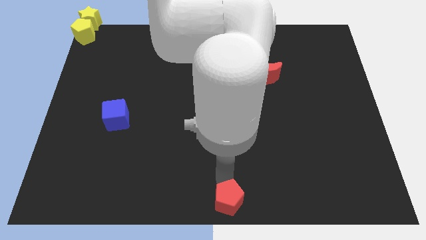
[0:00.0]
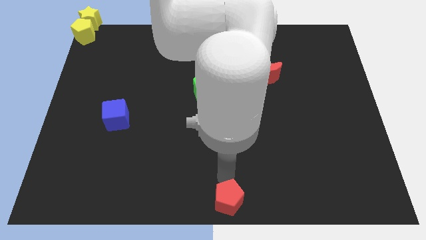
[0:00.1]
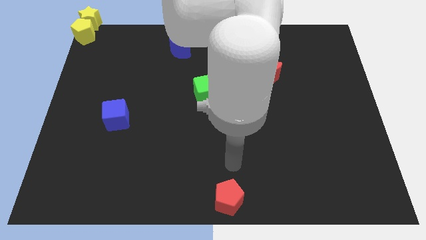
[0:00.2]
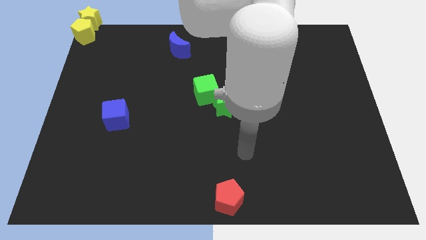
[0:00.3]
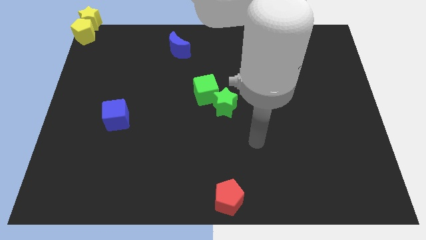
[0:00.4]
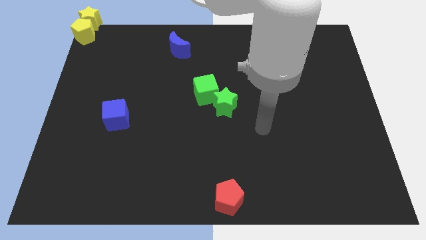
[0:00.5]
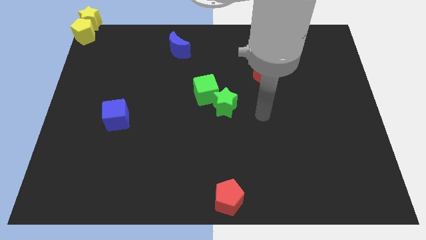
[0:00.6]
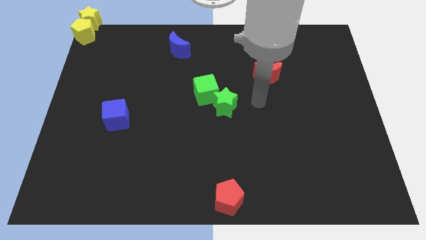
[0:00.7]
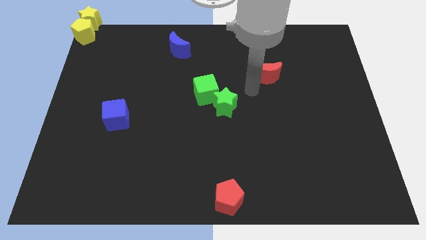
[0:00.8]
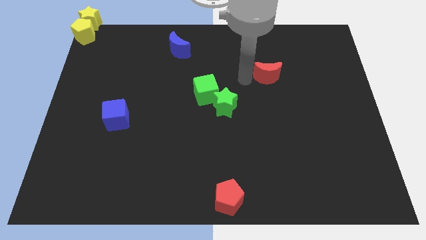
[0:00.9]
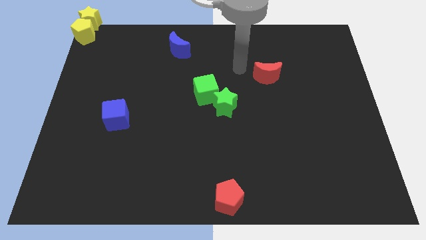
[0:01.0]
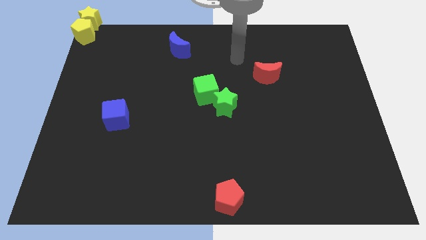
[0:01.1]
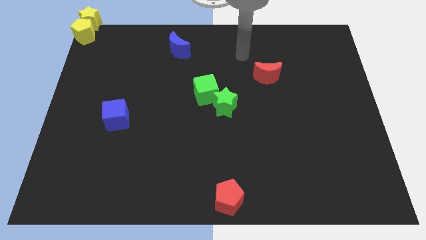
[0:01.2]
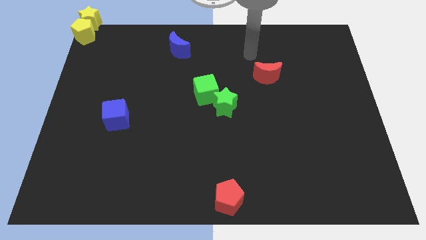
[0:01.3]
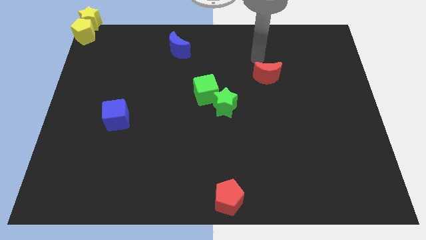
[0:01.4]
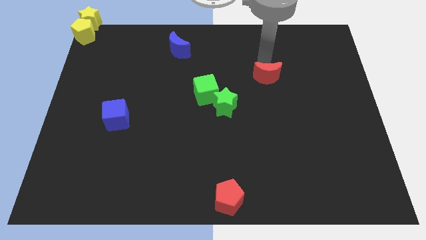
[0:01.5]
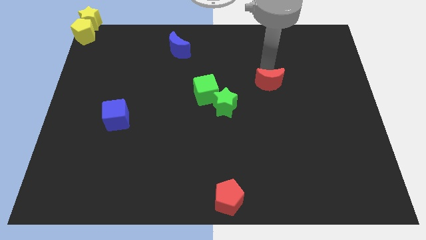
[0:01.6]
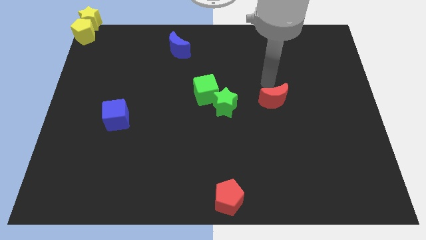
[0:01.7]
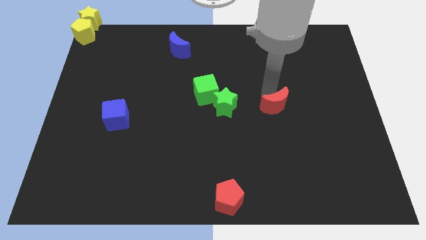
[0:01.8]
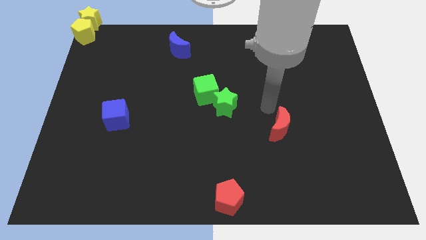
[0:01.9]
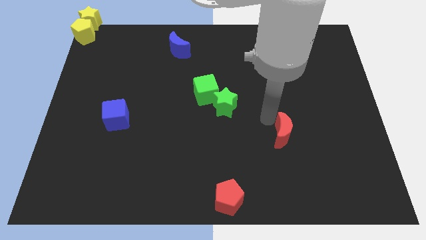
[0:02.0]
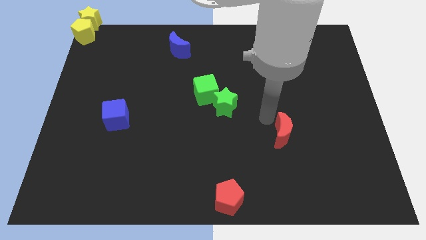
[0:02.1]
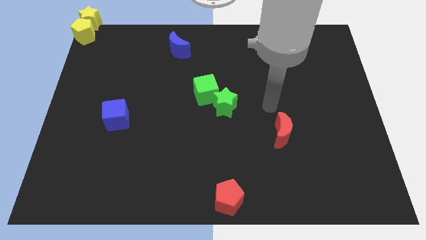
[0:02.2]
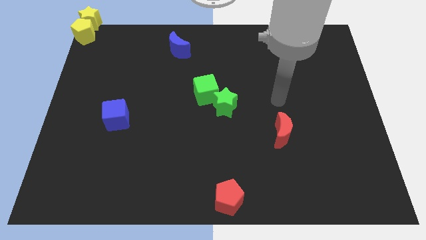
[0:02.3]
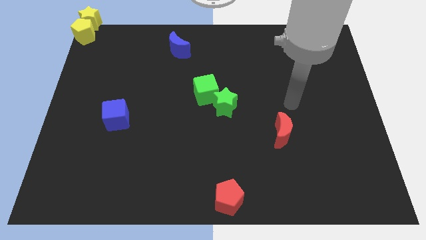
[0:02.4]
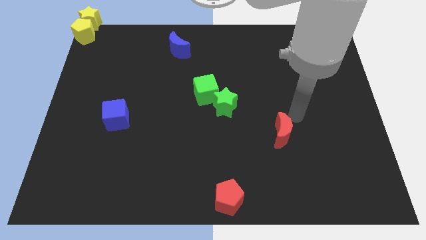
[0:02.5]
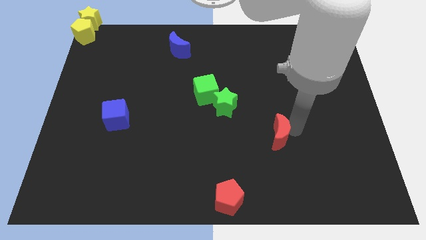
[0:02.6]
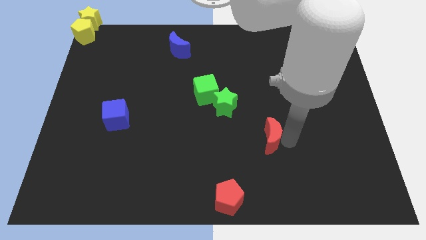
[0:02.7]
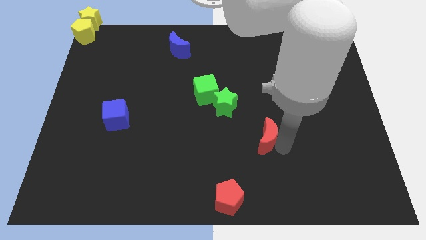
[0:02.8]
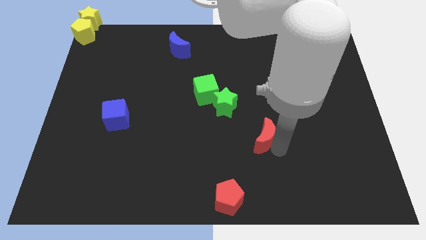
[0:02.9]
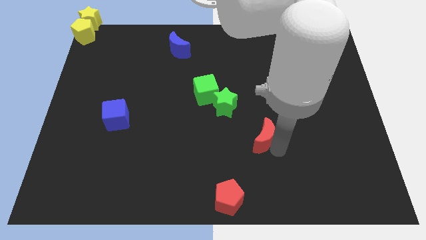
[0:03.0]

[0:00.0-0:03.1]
move the red crescent at the bottom of the green star diagonally on the right side

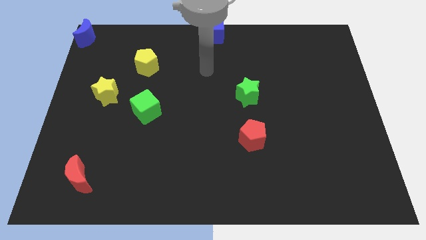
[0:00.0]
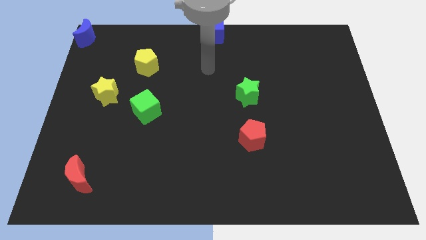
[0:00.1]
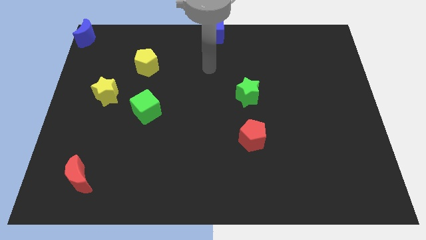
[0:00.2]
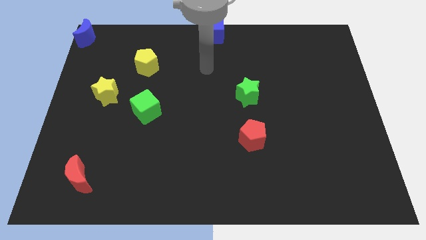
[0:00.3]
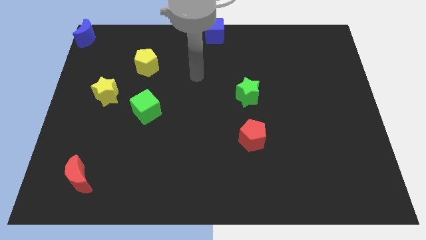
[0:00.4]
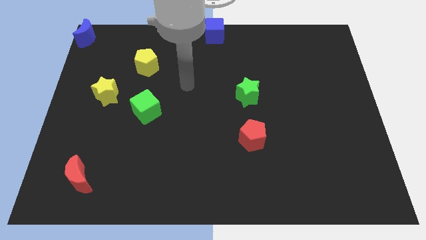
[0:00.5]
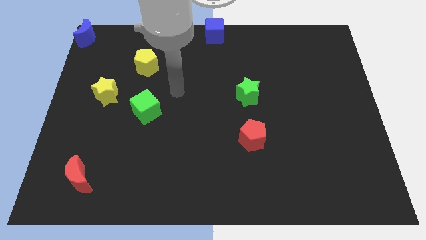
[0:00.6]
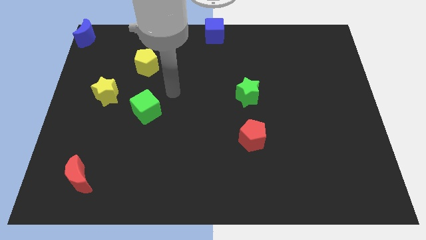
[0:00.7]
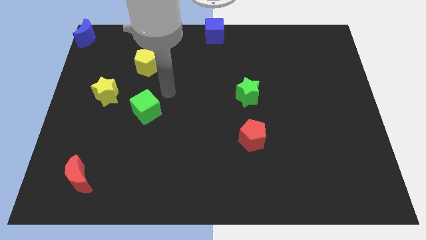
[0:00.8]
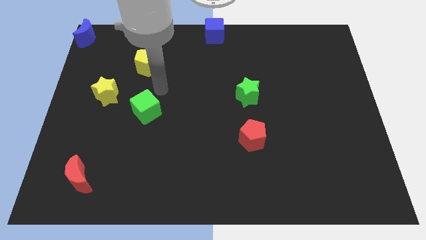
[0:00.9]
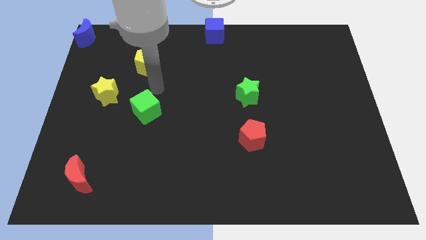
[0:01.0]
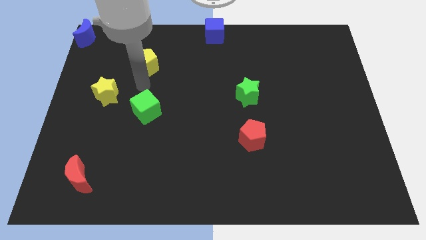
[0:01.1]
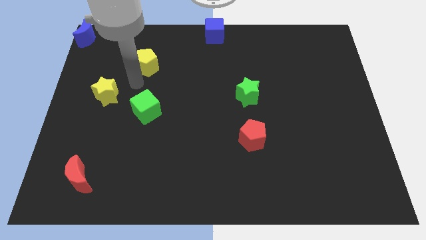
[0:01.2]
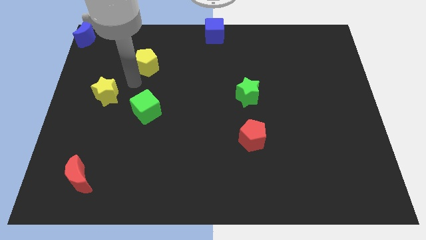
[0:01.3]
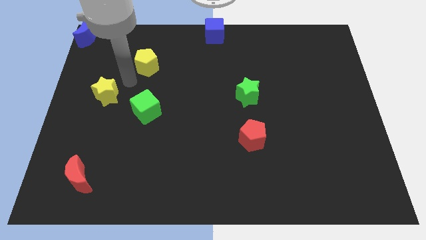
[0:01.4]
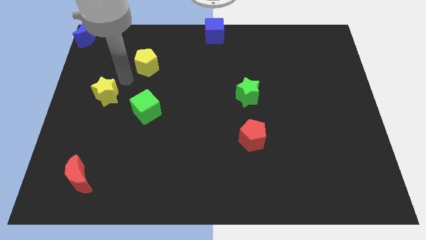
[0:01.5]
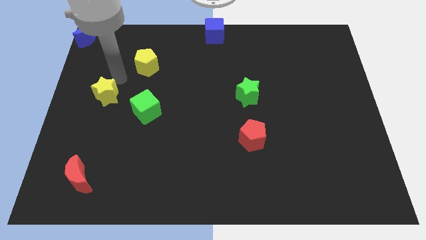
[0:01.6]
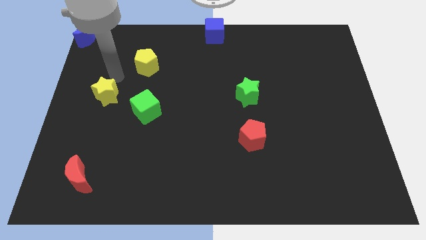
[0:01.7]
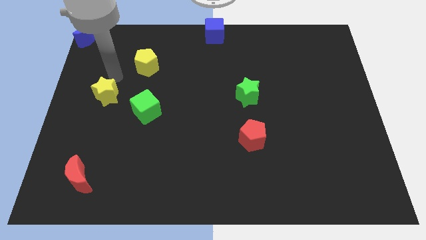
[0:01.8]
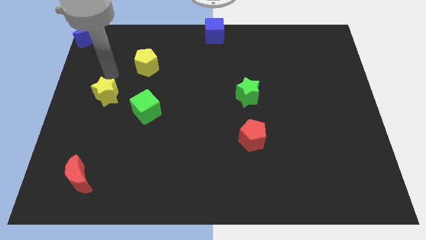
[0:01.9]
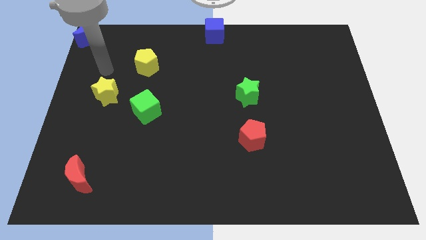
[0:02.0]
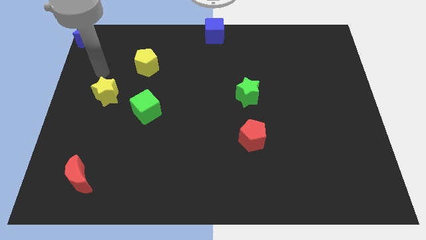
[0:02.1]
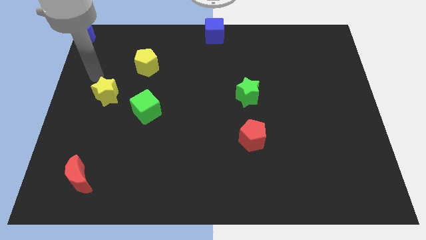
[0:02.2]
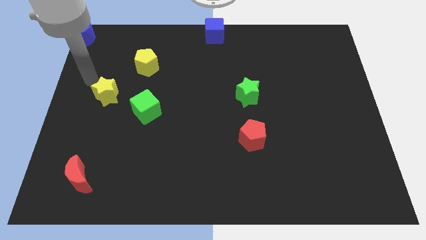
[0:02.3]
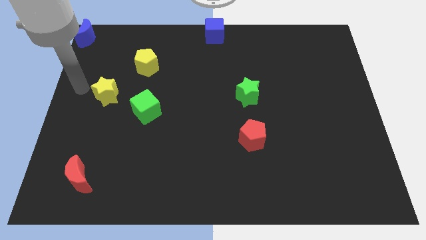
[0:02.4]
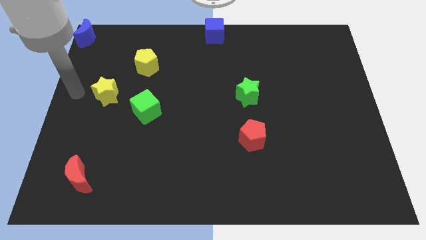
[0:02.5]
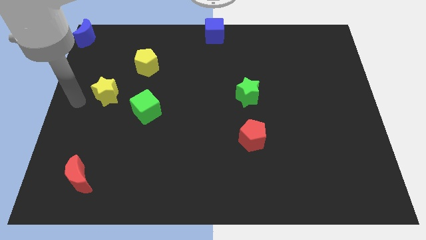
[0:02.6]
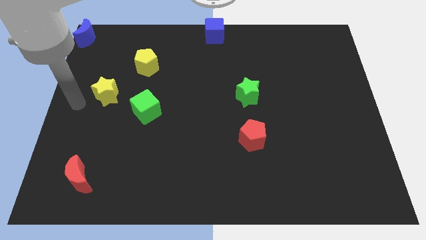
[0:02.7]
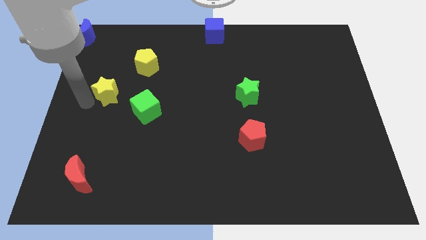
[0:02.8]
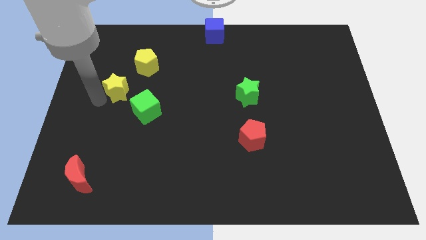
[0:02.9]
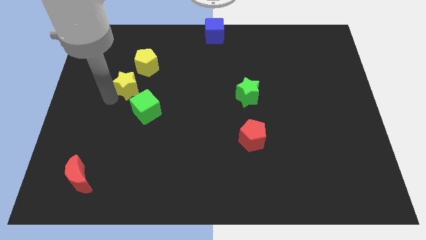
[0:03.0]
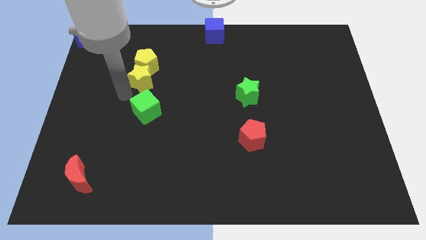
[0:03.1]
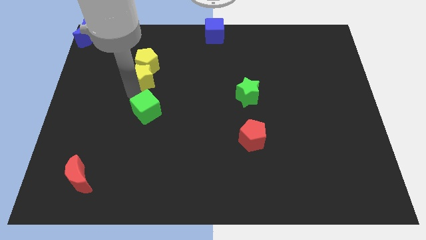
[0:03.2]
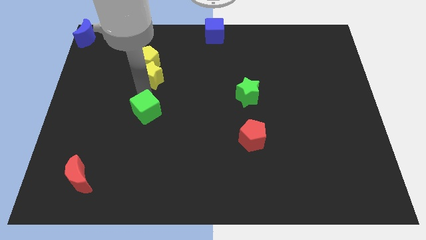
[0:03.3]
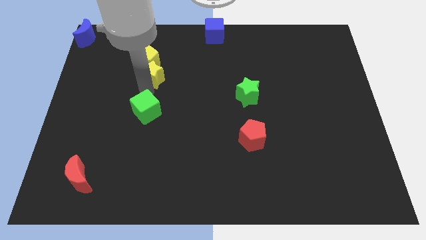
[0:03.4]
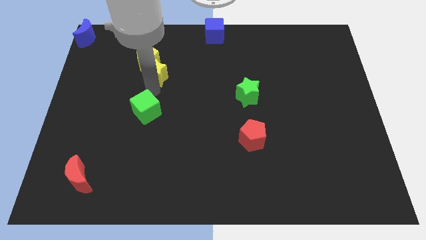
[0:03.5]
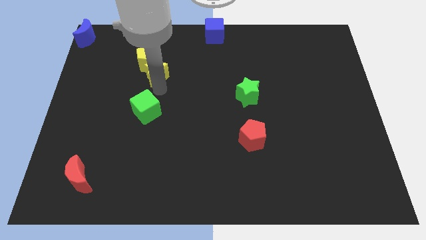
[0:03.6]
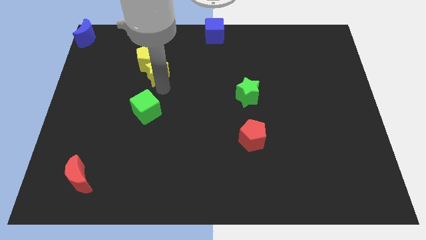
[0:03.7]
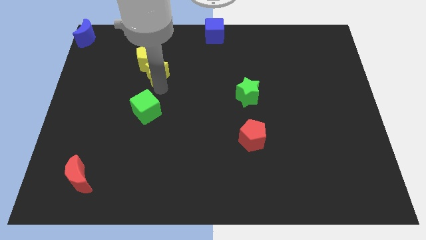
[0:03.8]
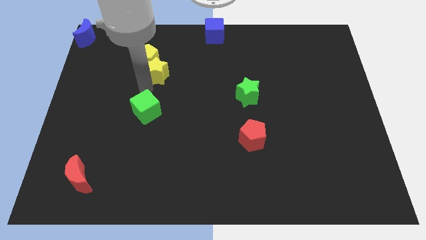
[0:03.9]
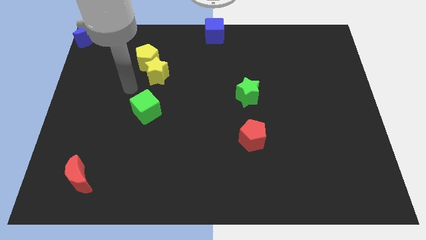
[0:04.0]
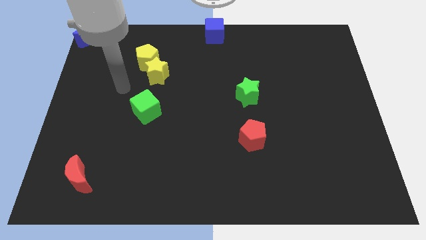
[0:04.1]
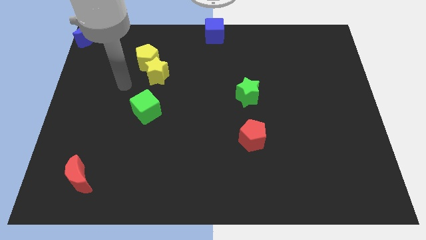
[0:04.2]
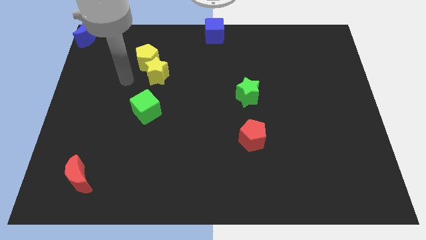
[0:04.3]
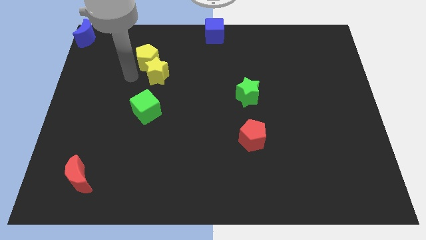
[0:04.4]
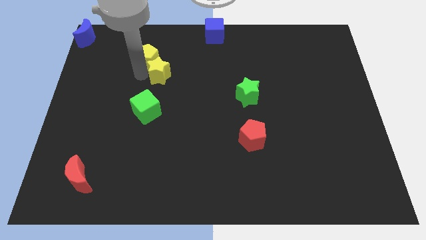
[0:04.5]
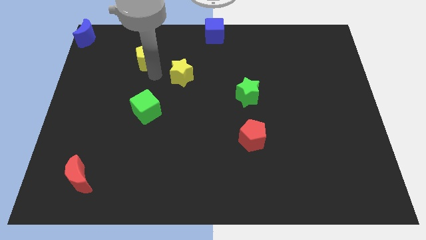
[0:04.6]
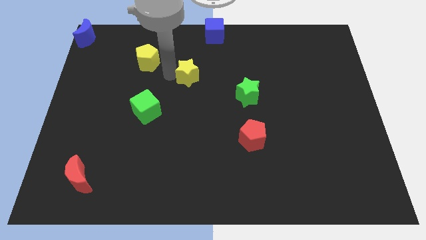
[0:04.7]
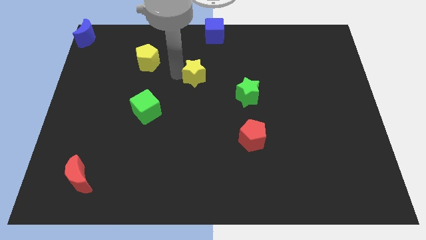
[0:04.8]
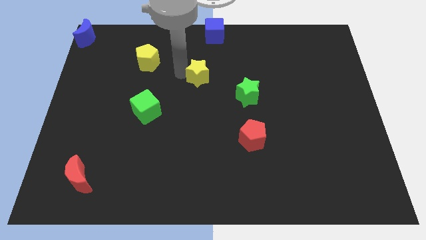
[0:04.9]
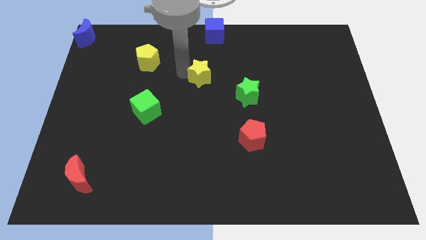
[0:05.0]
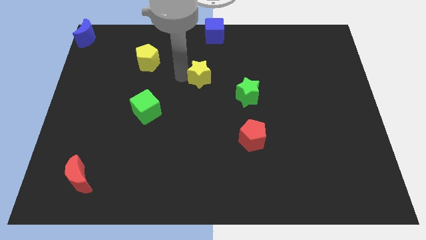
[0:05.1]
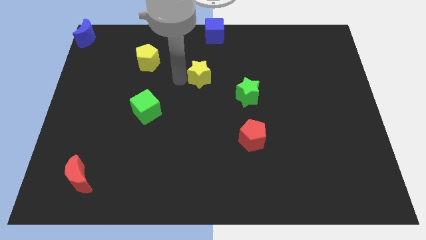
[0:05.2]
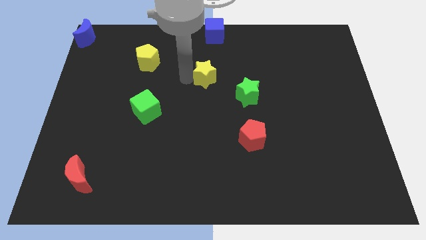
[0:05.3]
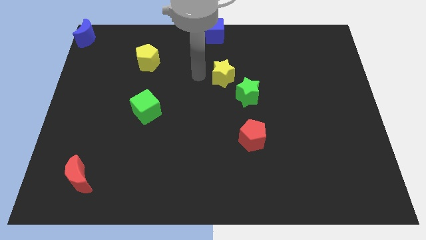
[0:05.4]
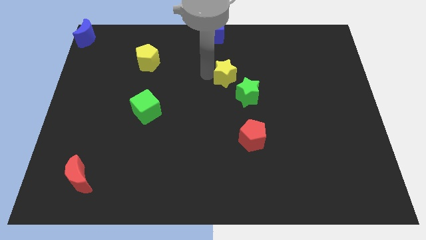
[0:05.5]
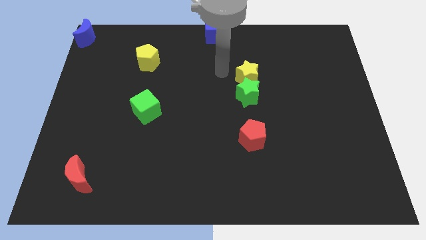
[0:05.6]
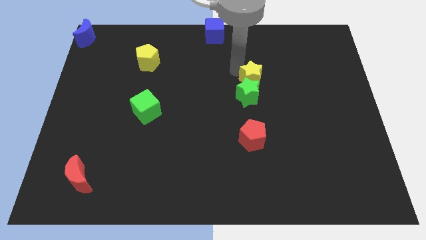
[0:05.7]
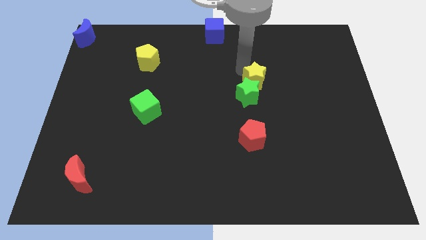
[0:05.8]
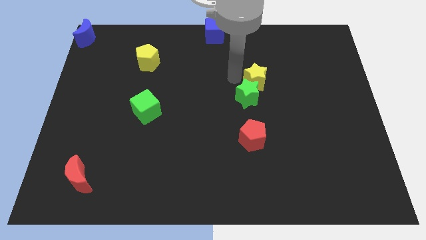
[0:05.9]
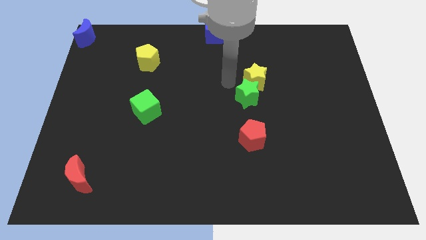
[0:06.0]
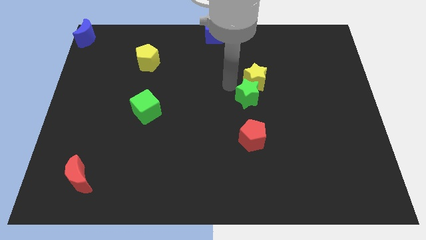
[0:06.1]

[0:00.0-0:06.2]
move the yellow star right above the green star
